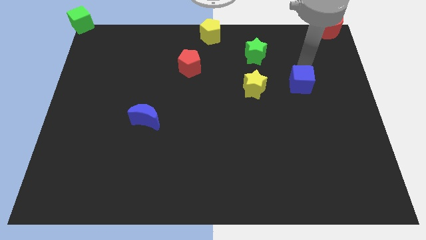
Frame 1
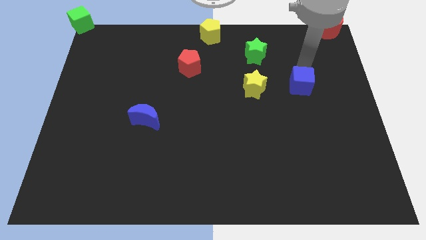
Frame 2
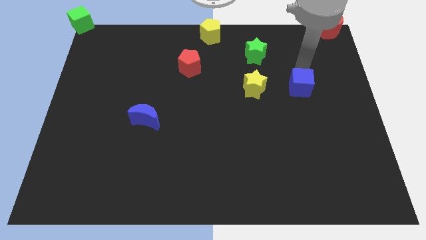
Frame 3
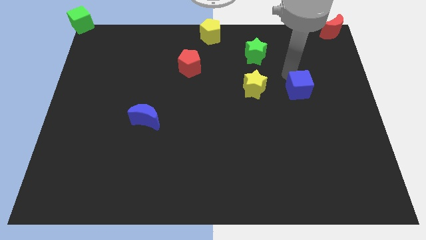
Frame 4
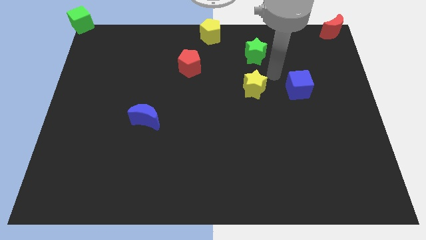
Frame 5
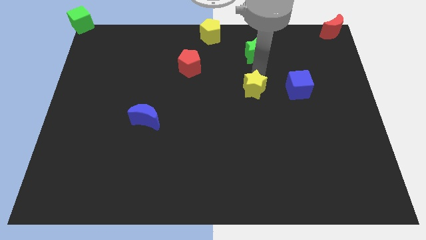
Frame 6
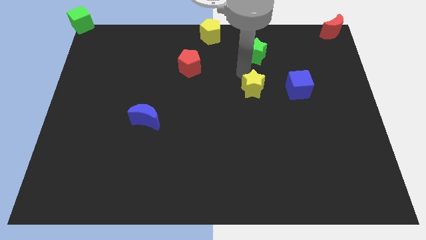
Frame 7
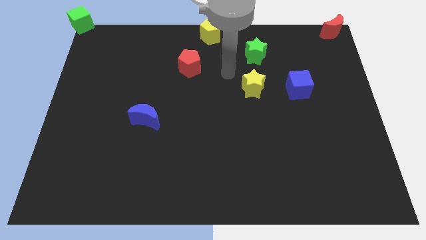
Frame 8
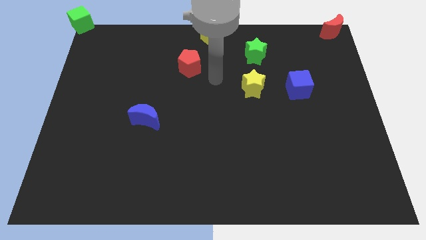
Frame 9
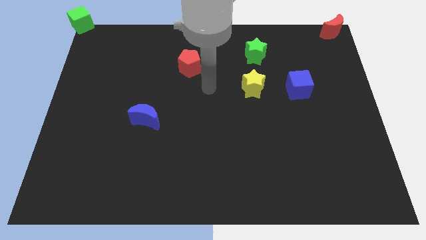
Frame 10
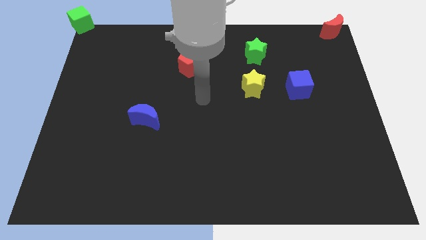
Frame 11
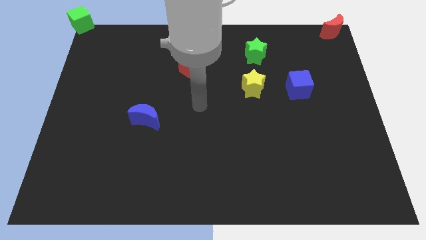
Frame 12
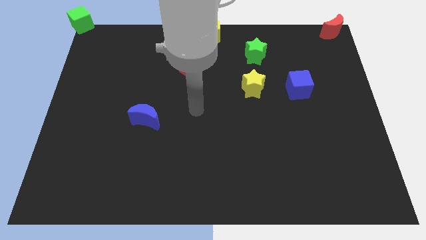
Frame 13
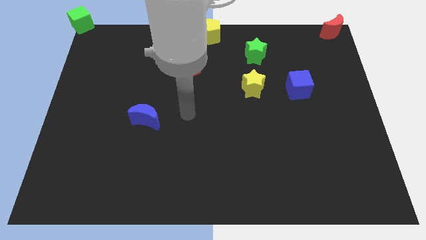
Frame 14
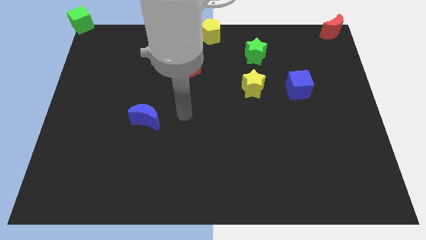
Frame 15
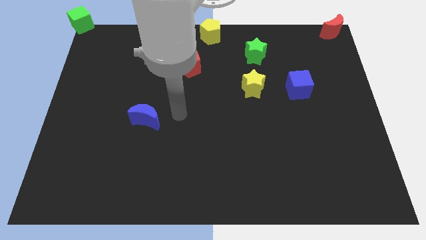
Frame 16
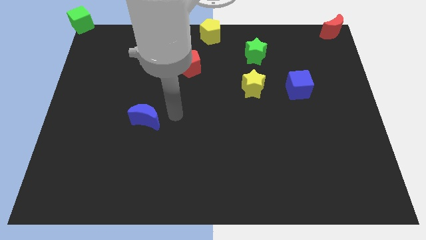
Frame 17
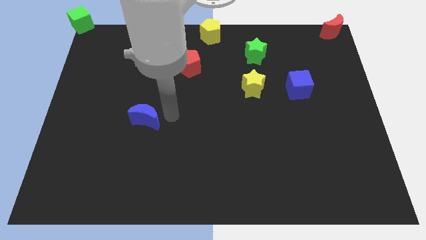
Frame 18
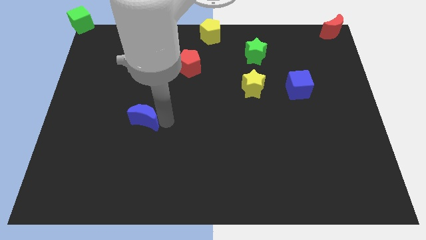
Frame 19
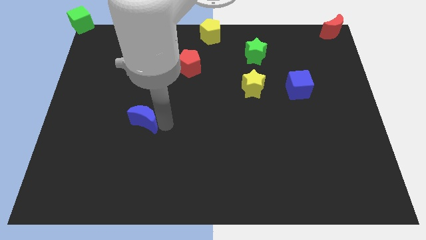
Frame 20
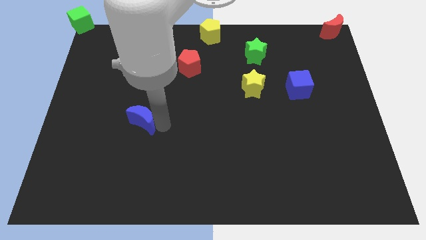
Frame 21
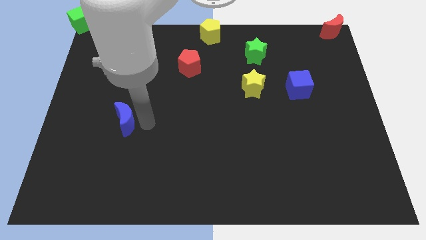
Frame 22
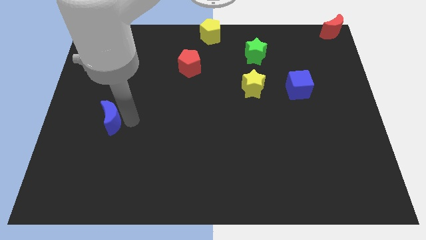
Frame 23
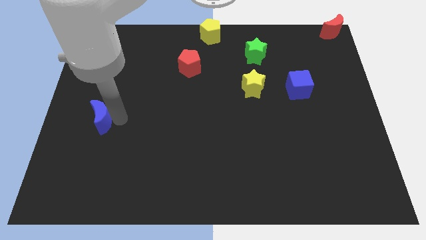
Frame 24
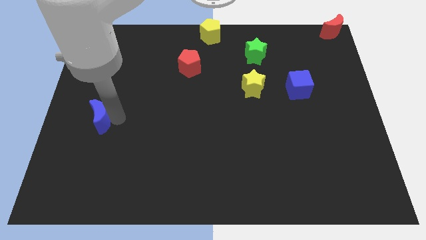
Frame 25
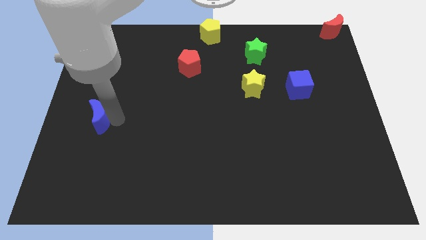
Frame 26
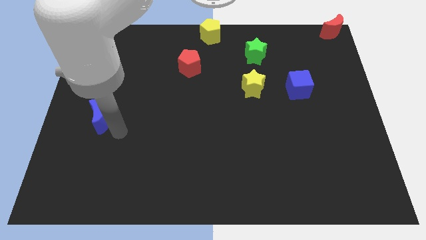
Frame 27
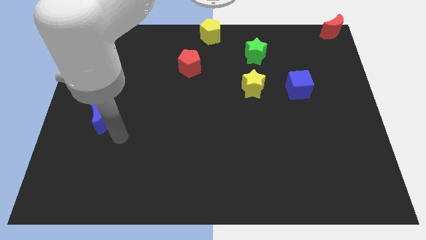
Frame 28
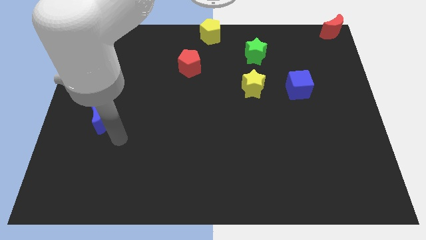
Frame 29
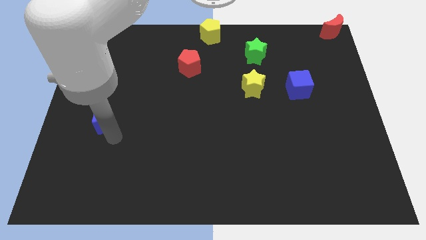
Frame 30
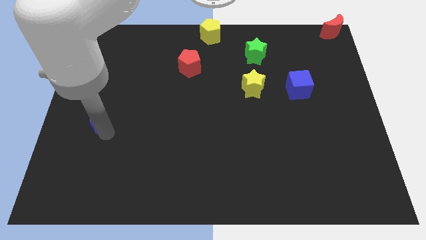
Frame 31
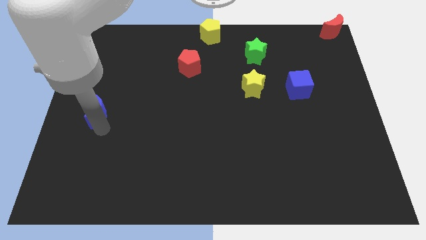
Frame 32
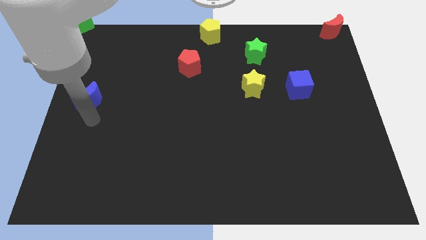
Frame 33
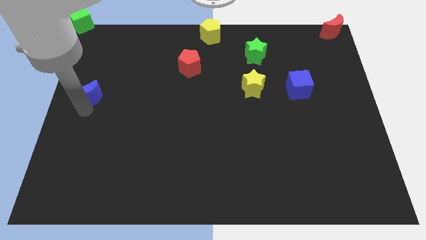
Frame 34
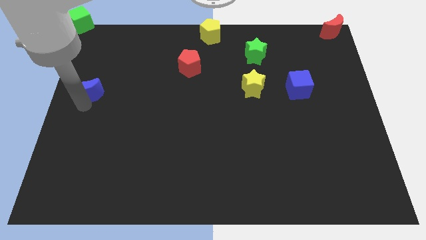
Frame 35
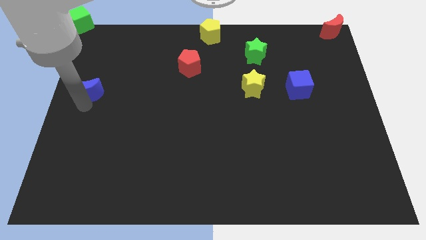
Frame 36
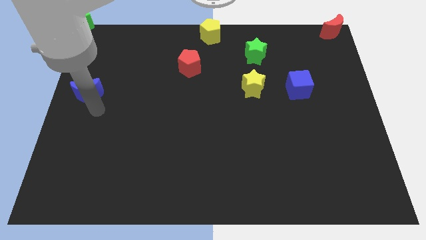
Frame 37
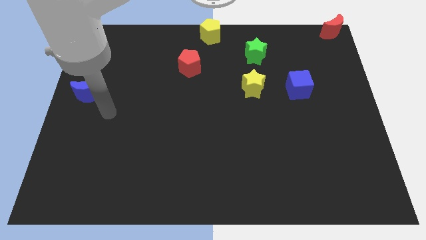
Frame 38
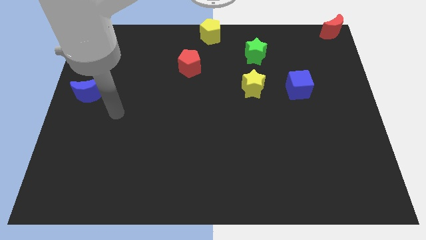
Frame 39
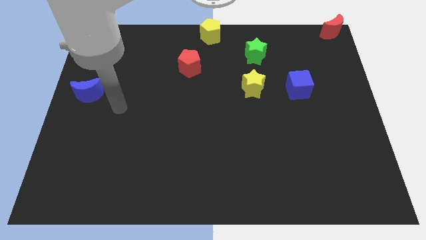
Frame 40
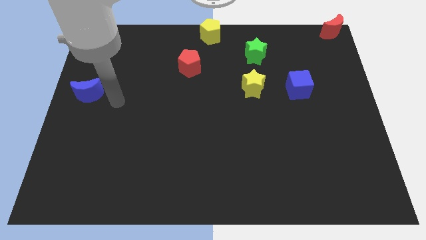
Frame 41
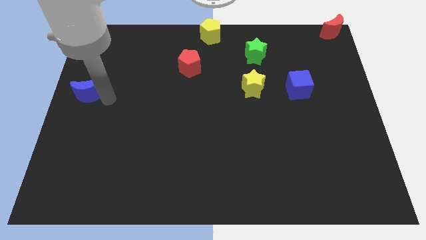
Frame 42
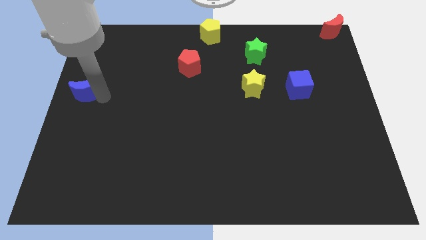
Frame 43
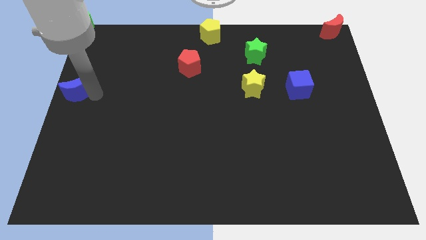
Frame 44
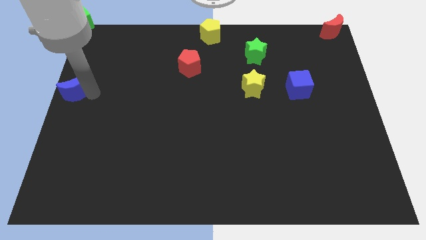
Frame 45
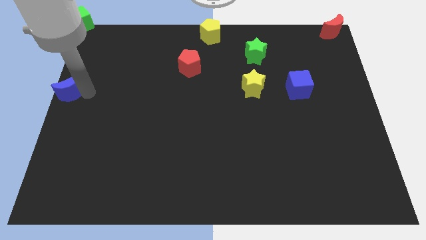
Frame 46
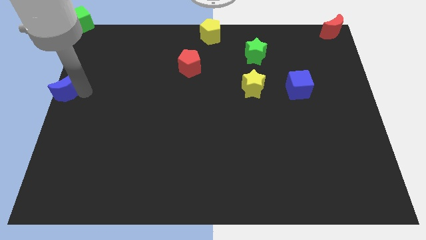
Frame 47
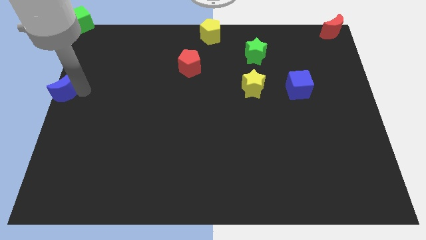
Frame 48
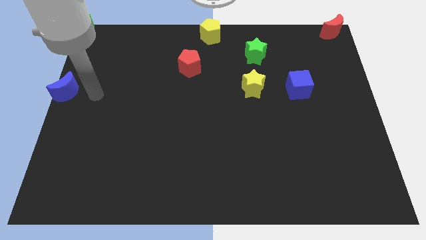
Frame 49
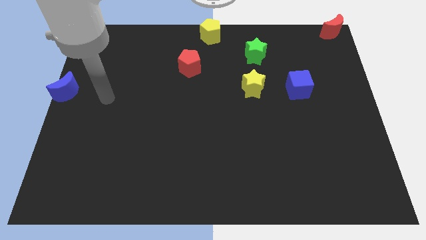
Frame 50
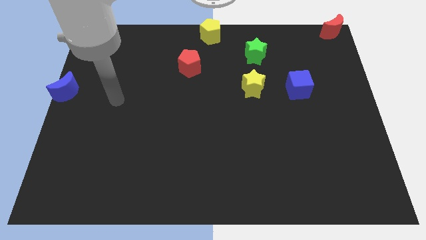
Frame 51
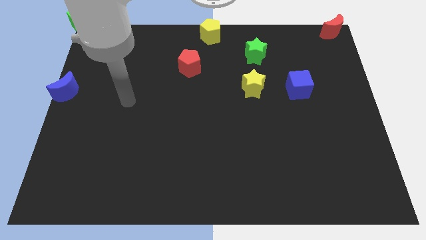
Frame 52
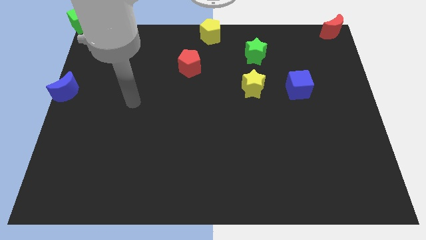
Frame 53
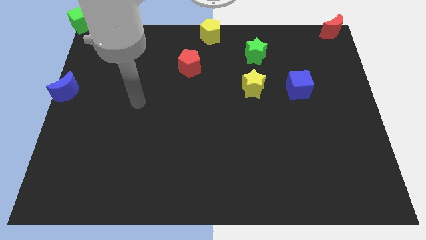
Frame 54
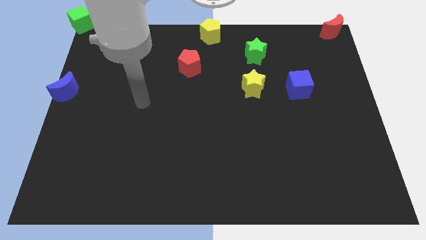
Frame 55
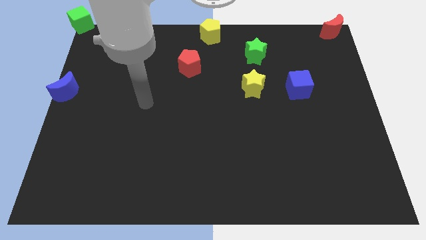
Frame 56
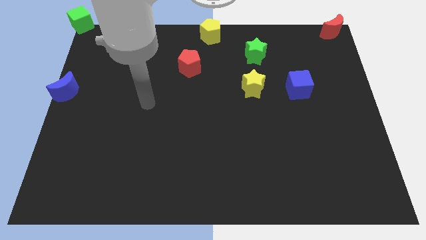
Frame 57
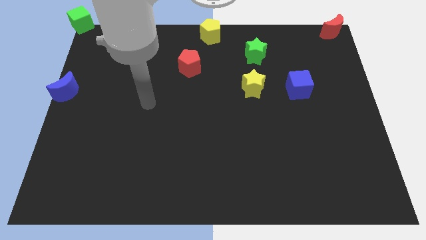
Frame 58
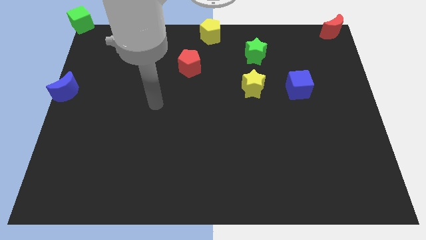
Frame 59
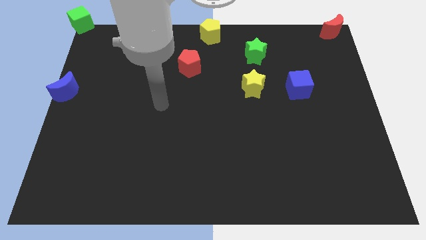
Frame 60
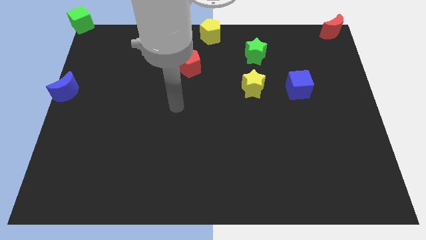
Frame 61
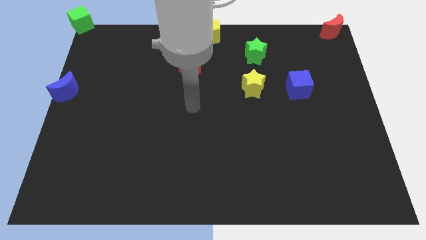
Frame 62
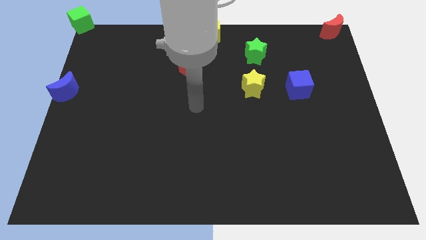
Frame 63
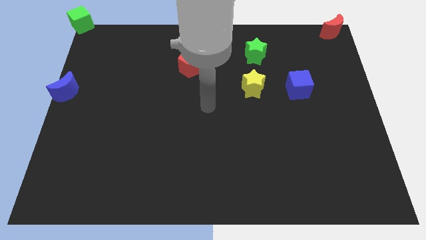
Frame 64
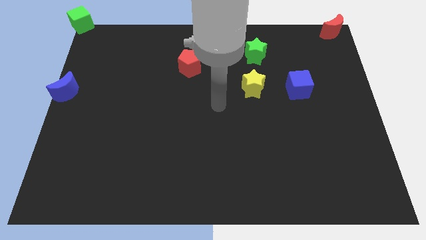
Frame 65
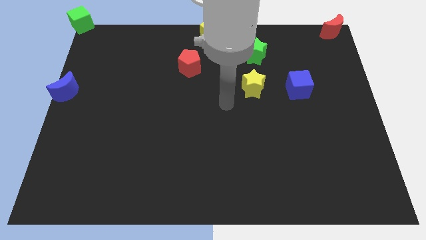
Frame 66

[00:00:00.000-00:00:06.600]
place the blue crescent below the green cube

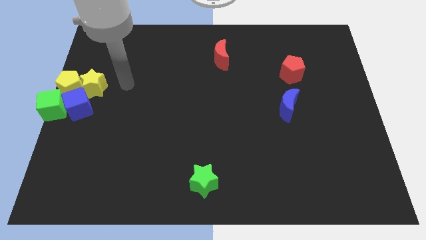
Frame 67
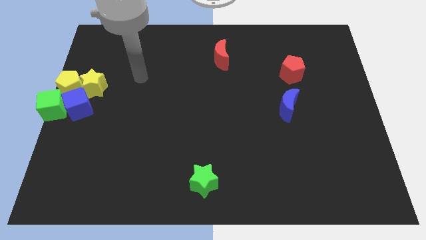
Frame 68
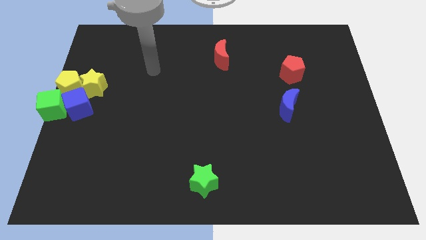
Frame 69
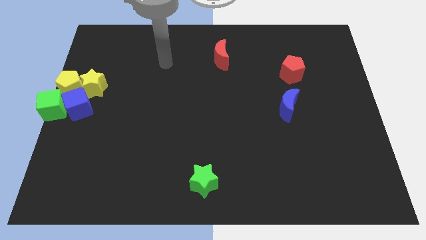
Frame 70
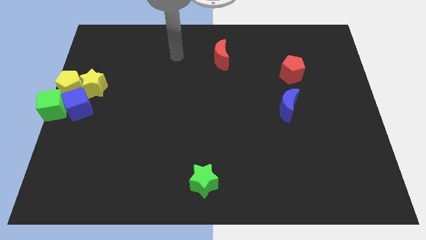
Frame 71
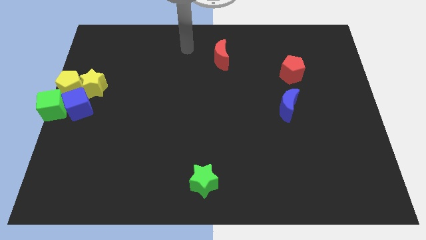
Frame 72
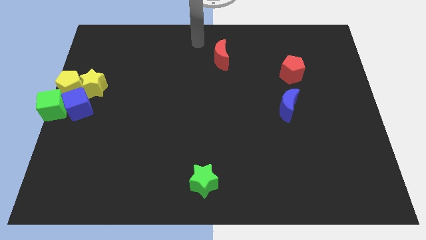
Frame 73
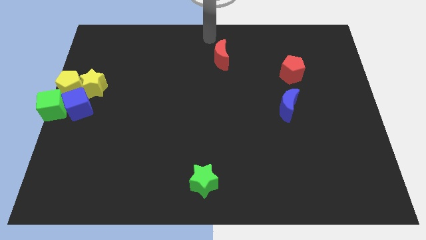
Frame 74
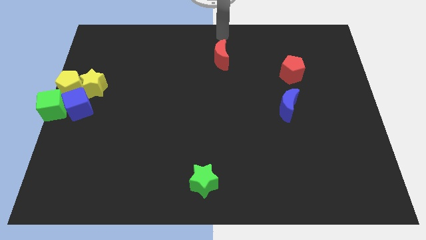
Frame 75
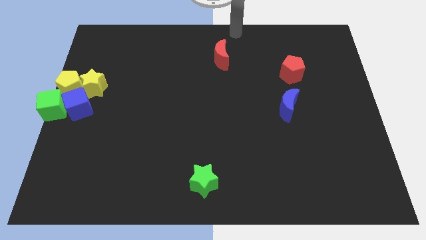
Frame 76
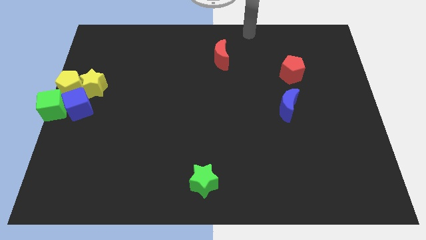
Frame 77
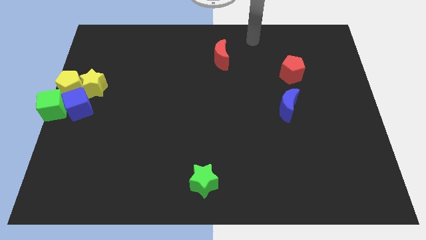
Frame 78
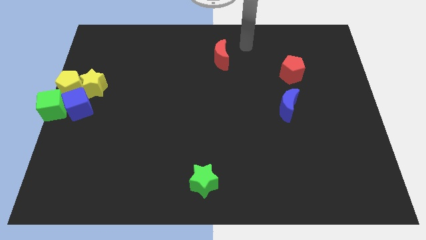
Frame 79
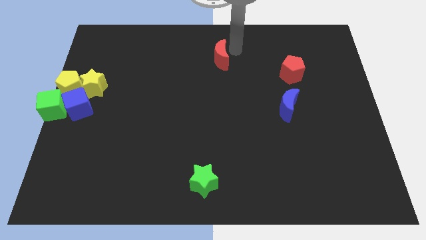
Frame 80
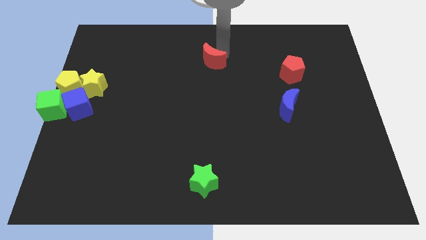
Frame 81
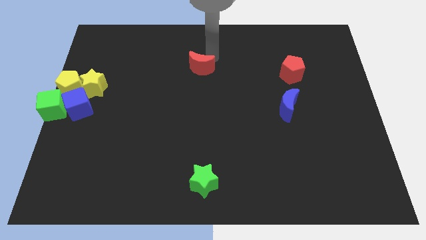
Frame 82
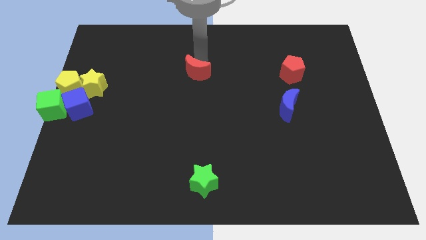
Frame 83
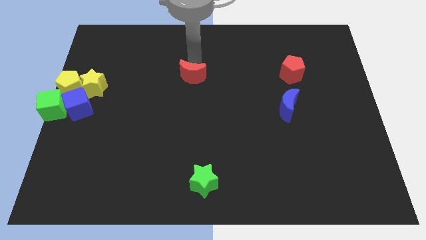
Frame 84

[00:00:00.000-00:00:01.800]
push the red moon towards the bottom

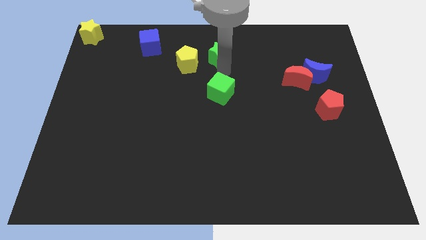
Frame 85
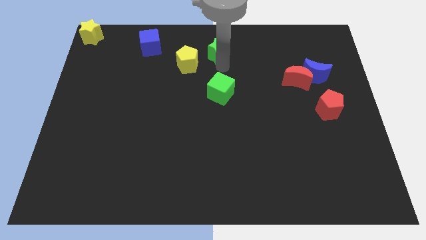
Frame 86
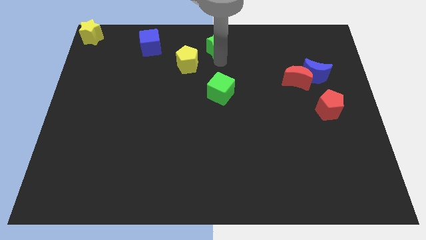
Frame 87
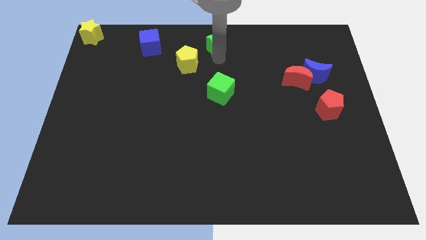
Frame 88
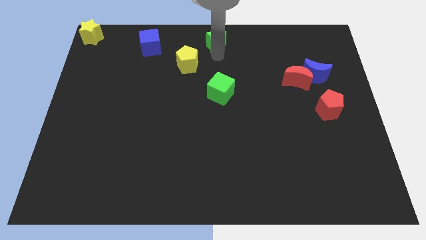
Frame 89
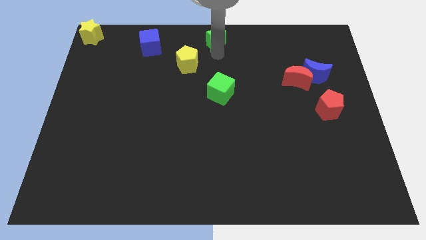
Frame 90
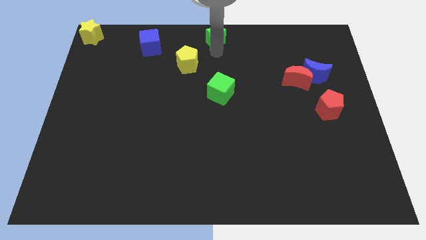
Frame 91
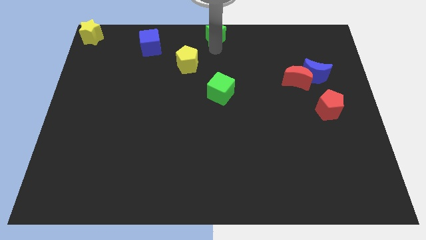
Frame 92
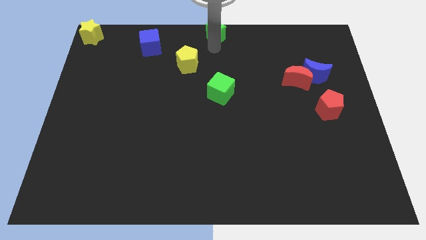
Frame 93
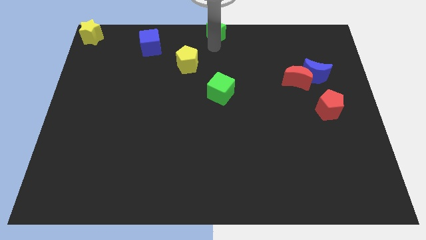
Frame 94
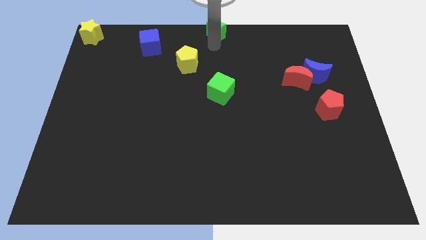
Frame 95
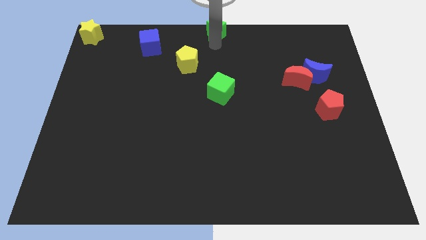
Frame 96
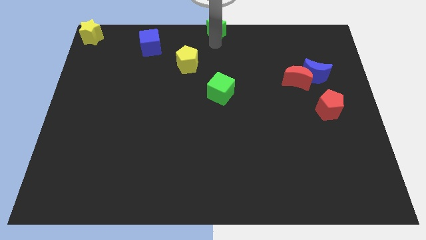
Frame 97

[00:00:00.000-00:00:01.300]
push the green star to the top center of the board
